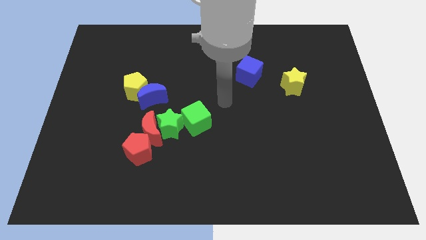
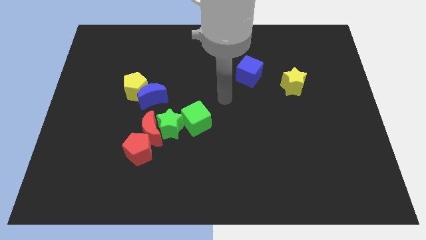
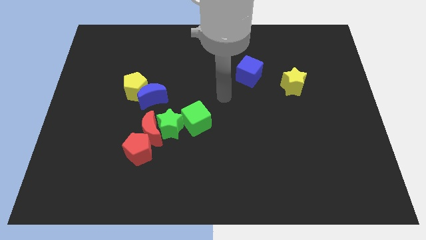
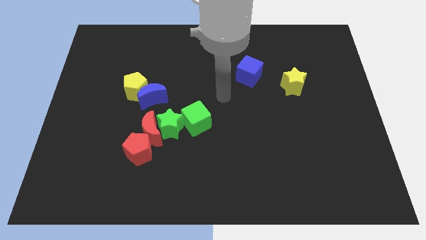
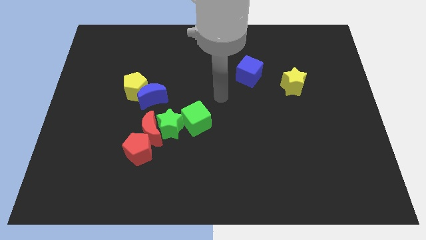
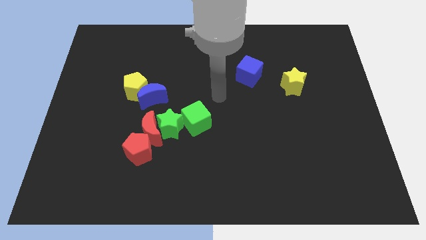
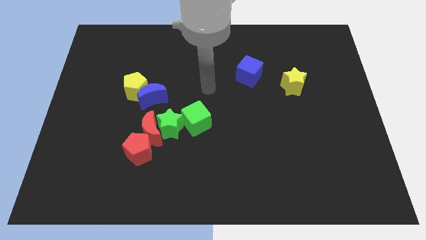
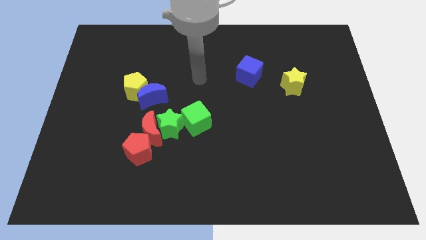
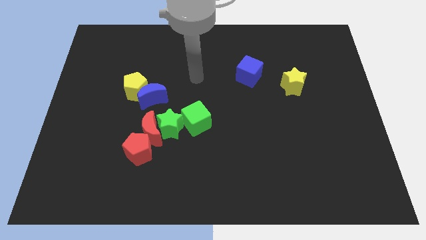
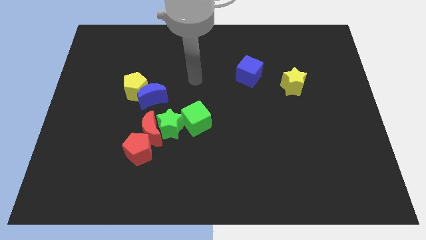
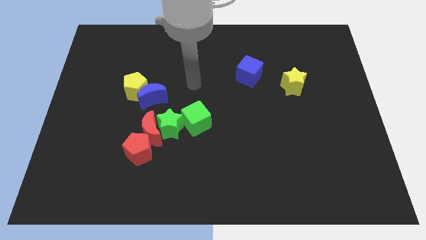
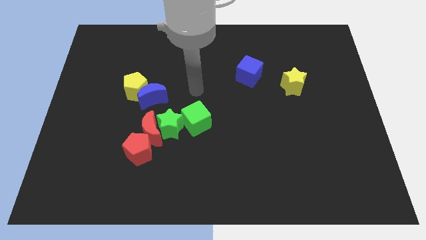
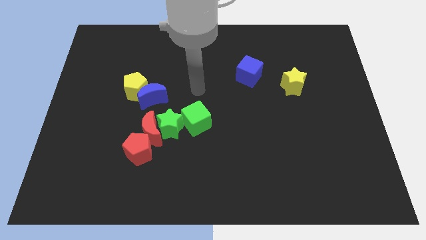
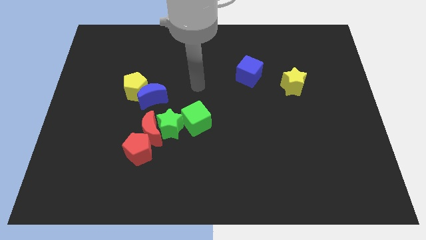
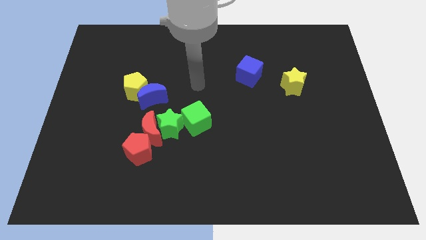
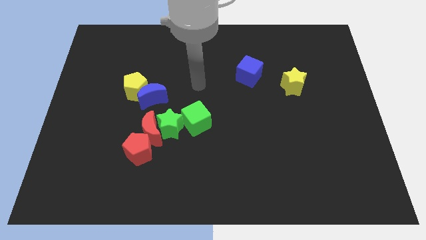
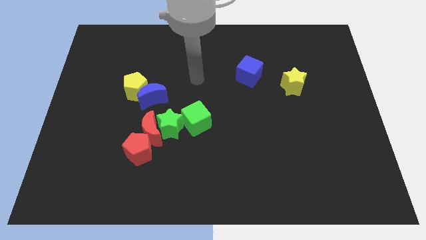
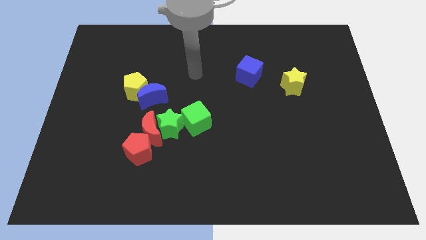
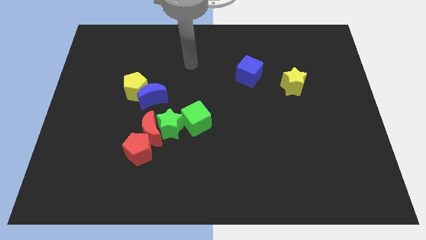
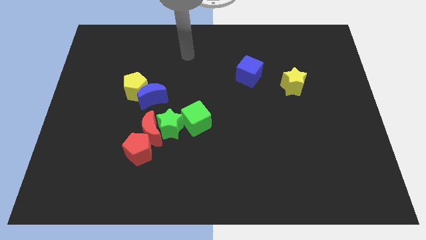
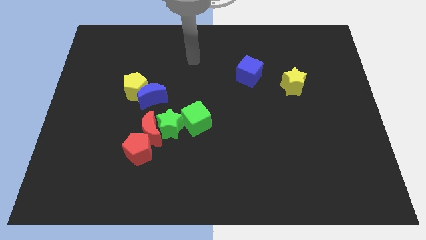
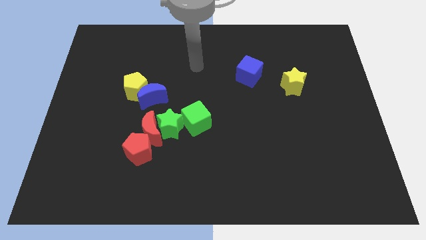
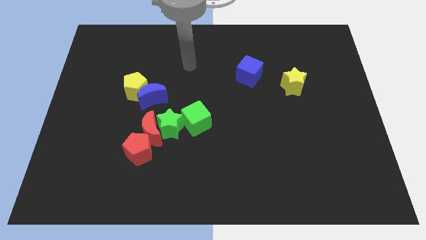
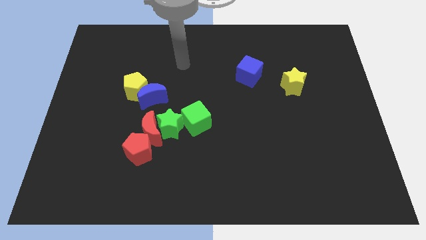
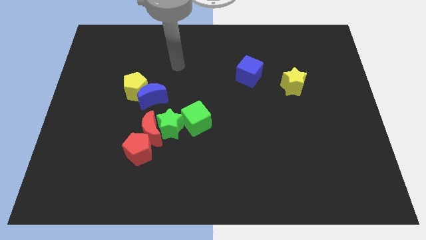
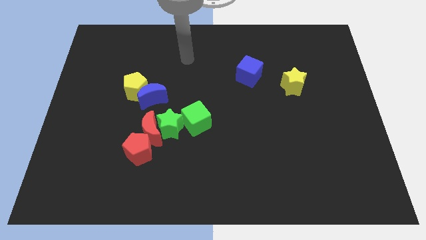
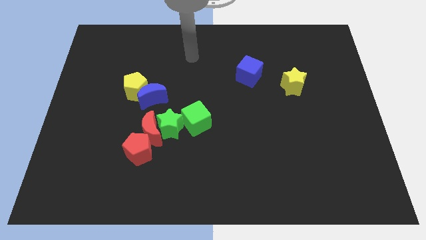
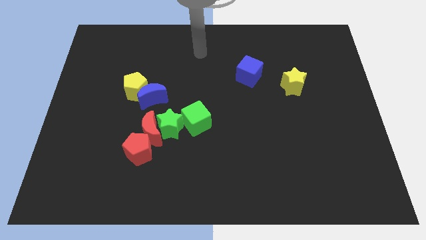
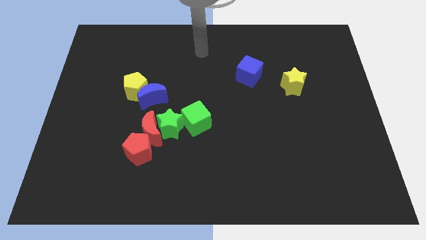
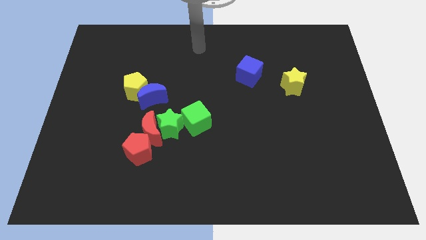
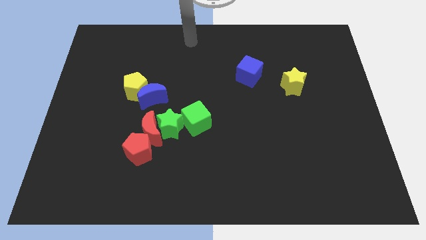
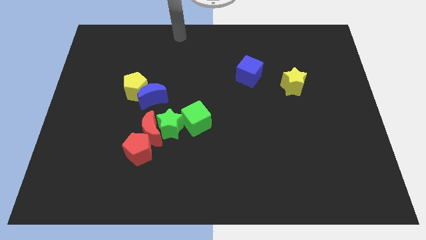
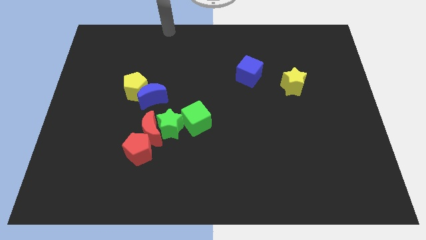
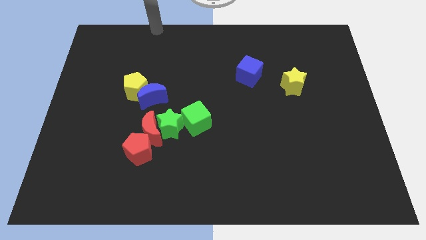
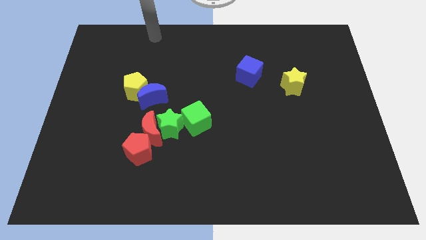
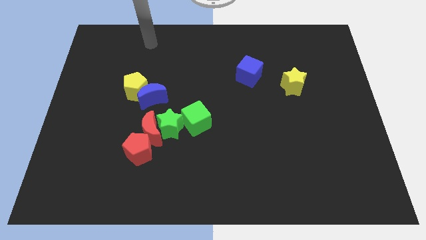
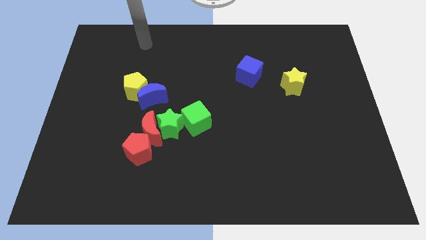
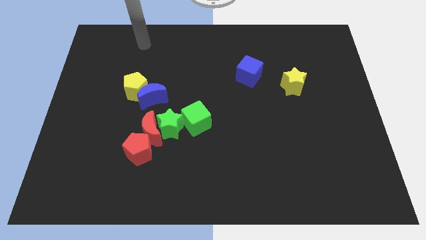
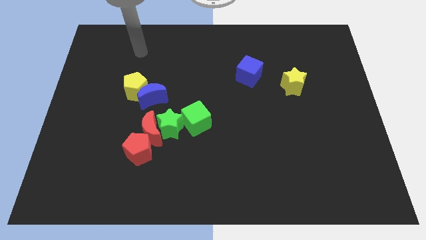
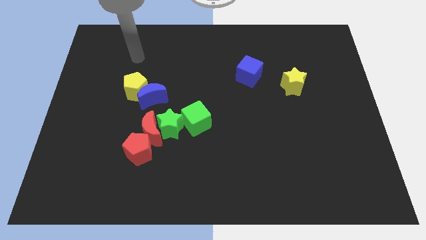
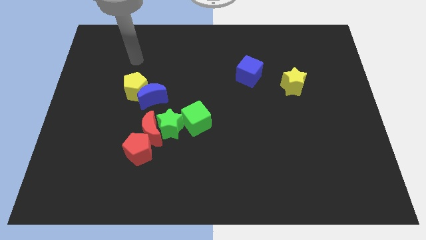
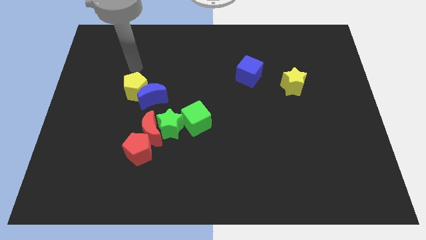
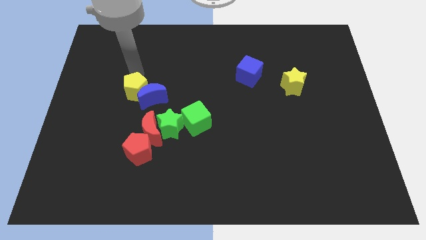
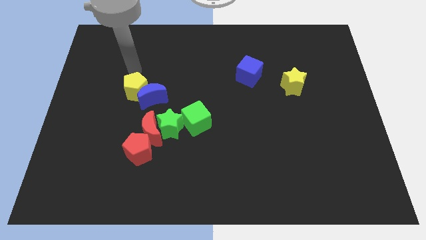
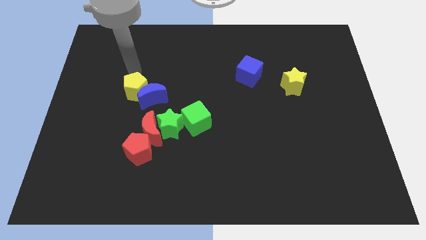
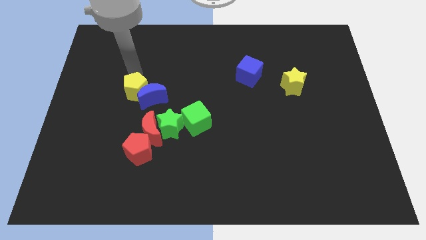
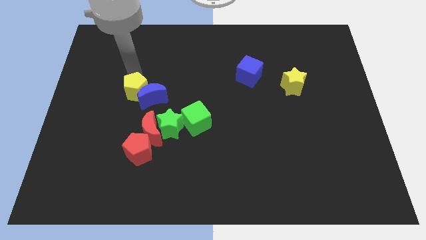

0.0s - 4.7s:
move your arm away from the green cube

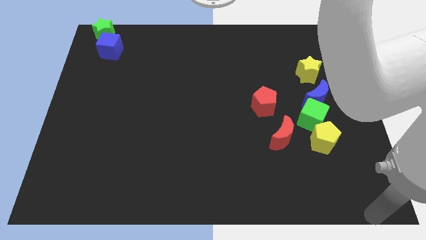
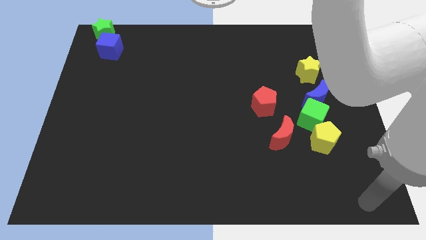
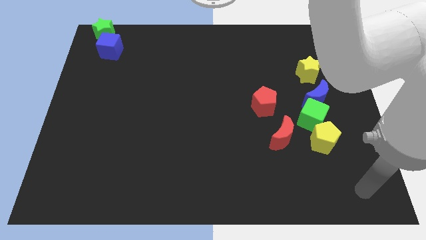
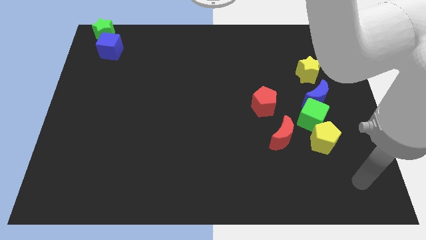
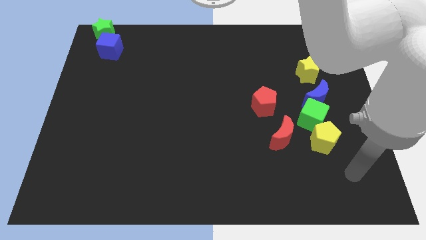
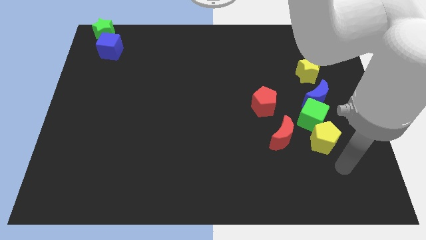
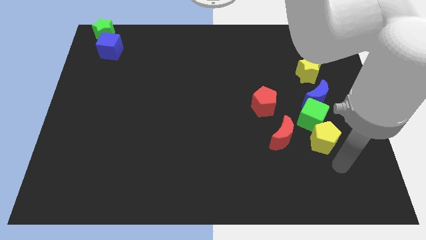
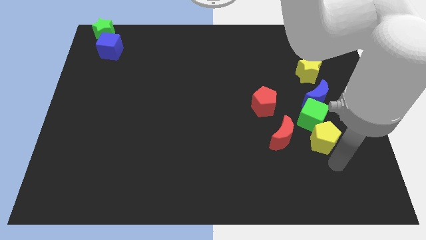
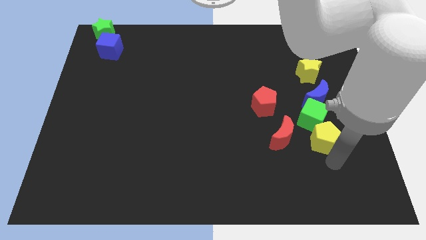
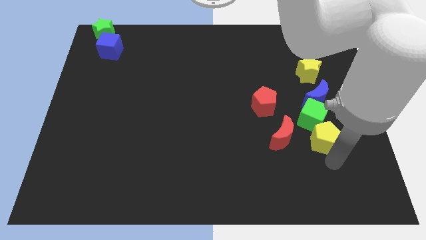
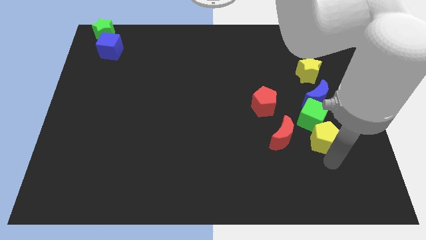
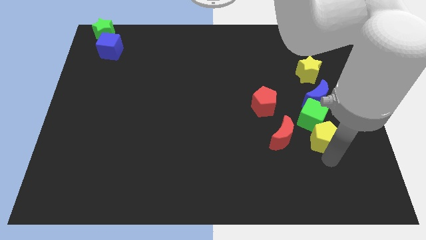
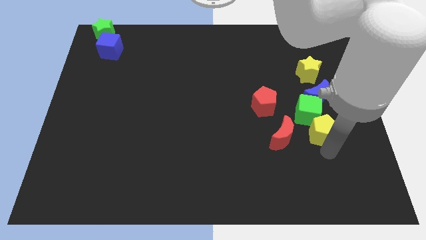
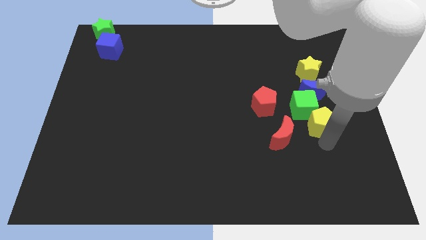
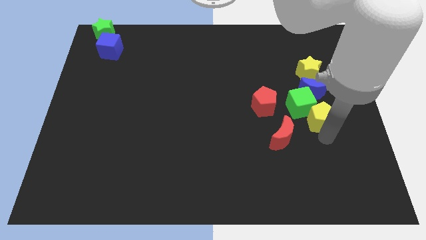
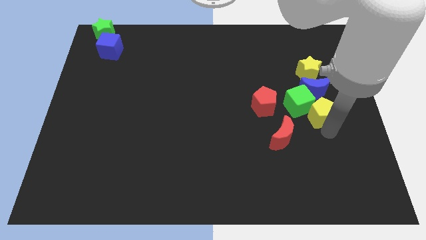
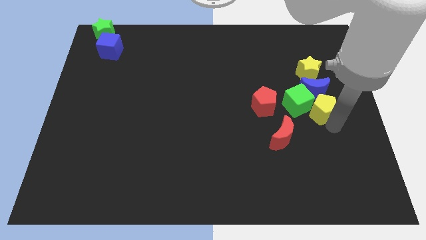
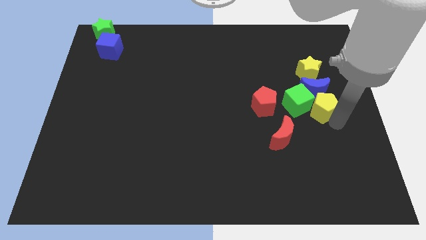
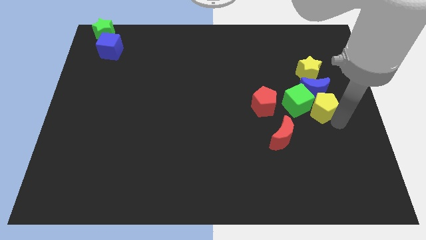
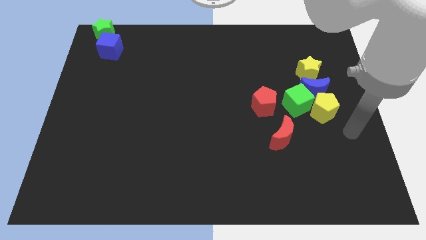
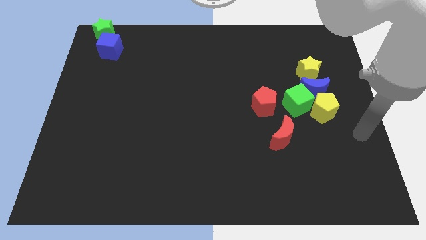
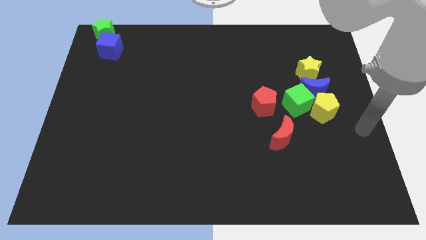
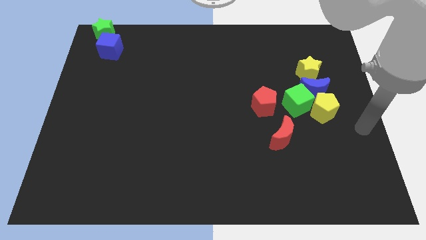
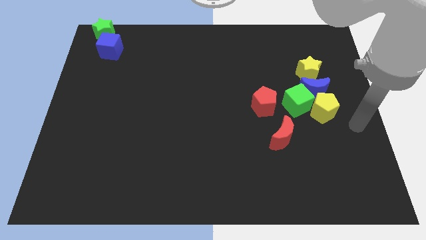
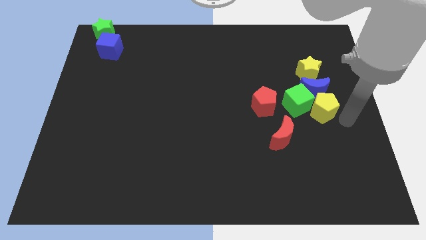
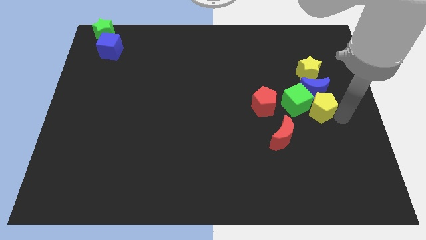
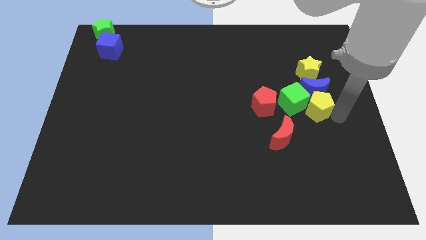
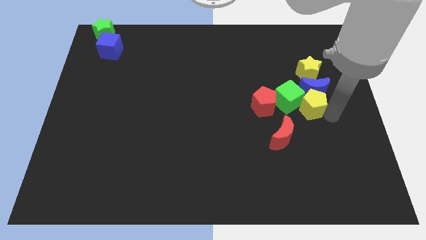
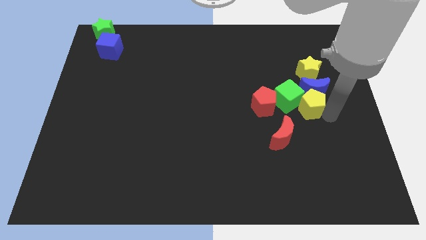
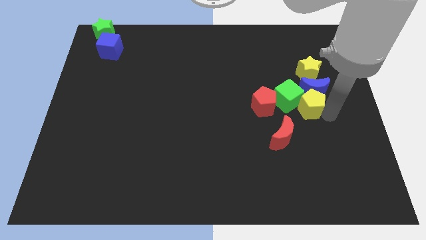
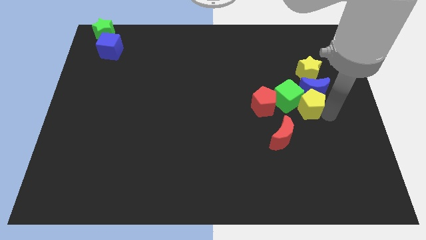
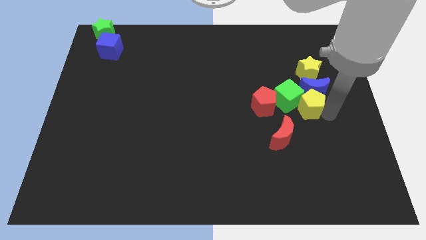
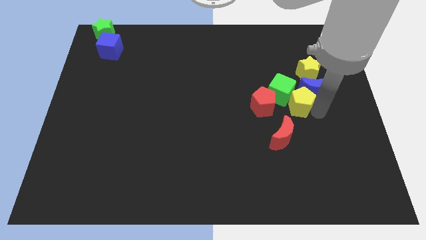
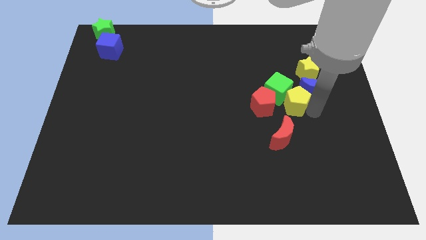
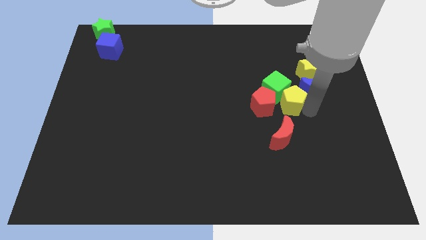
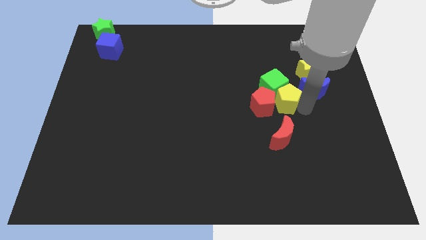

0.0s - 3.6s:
place the yellow pentagon right to the red pentagon

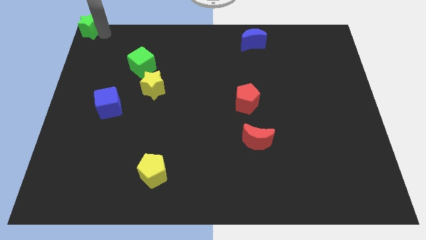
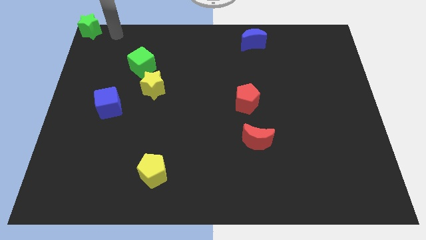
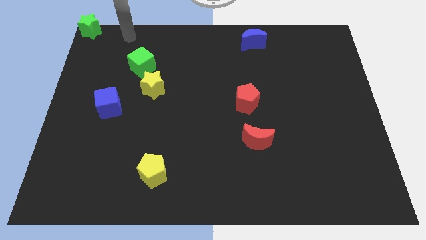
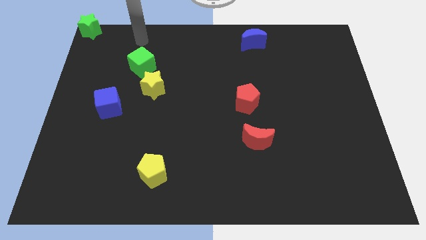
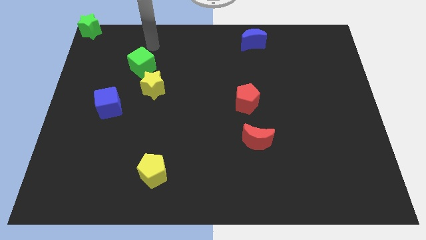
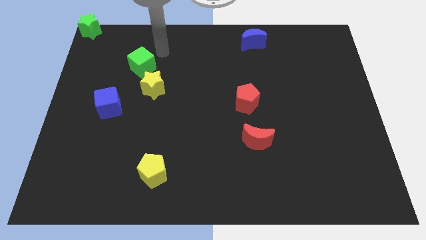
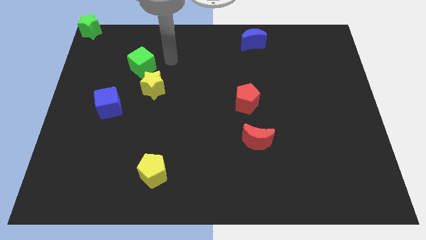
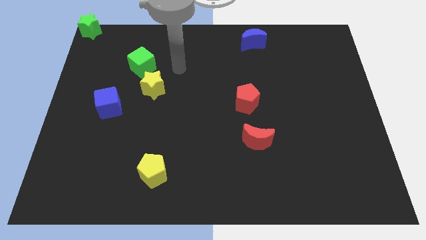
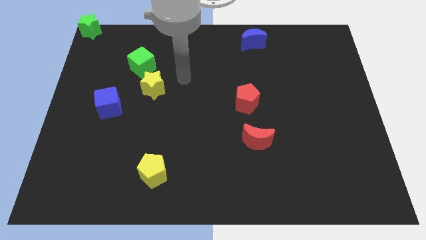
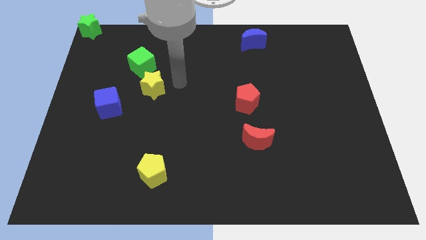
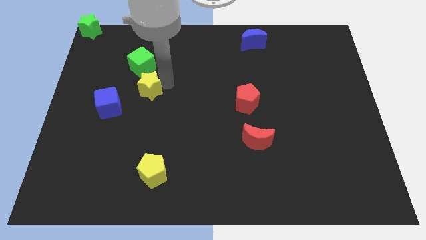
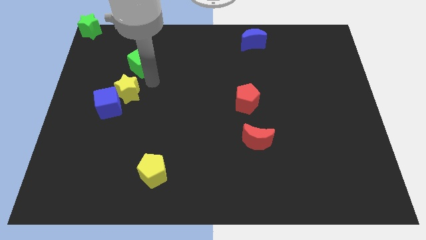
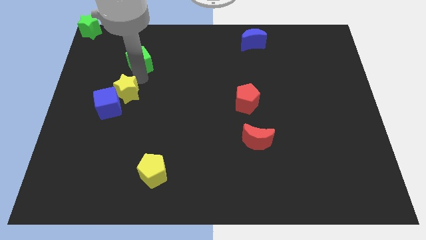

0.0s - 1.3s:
push the yellow star into the blue cube
